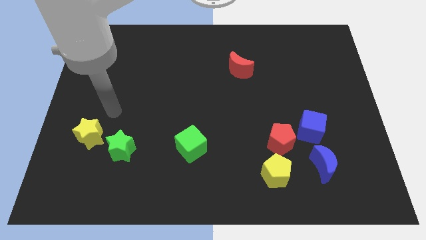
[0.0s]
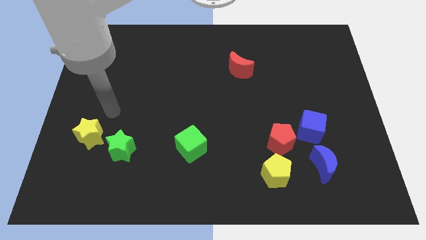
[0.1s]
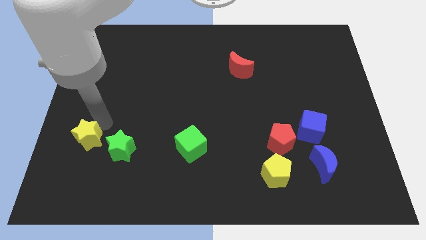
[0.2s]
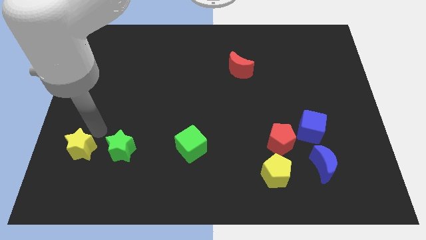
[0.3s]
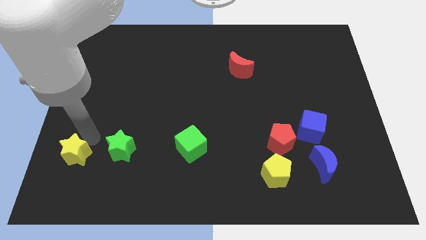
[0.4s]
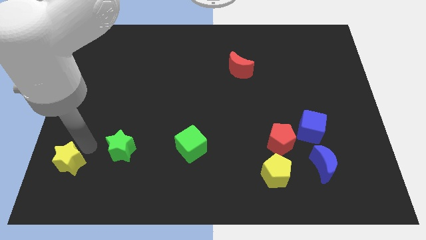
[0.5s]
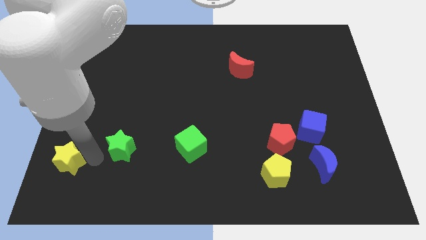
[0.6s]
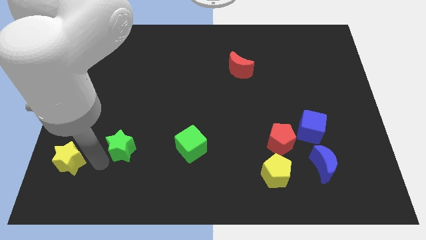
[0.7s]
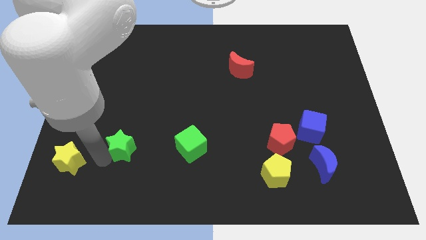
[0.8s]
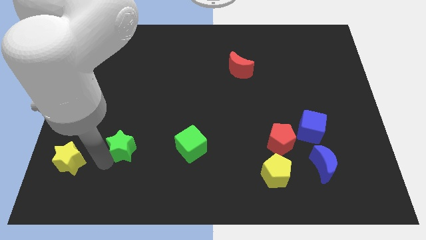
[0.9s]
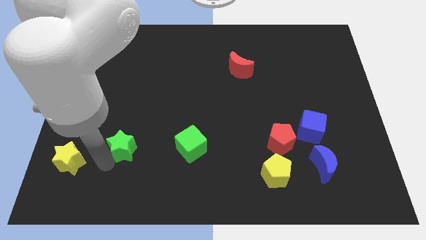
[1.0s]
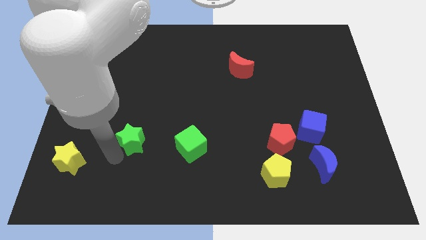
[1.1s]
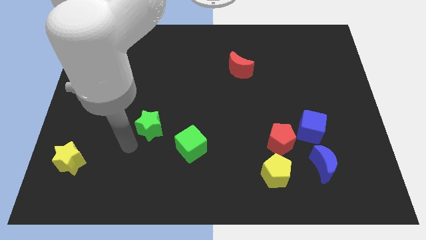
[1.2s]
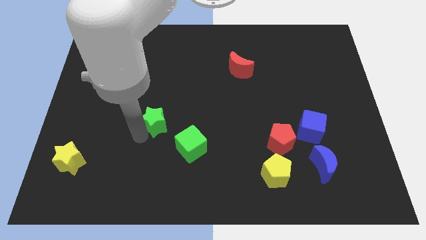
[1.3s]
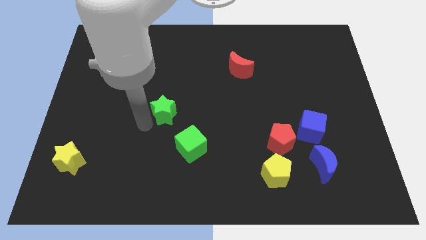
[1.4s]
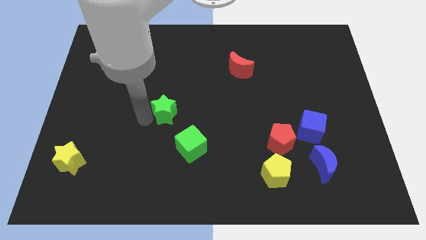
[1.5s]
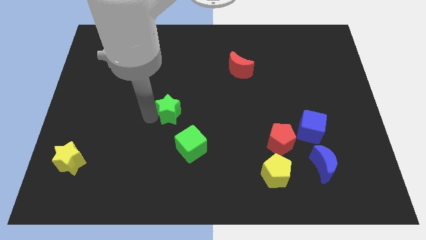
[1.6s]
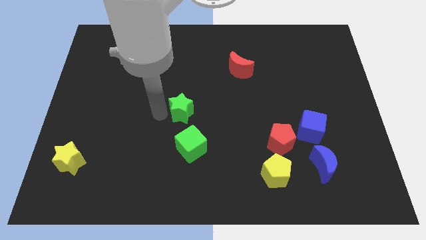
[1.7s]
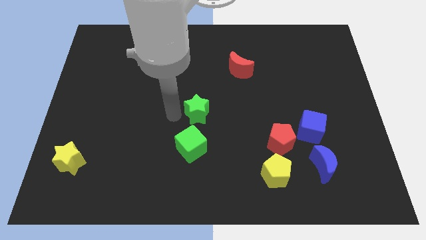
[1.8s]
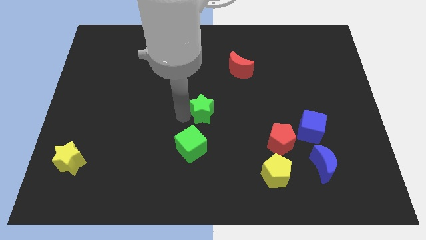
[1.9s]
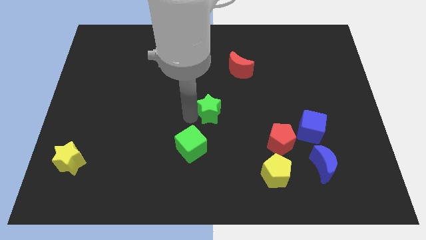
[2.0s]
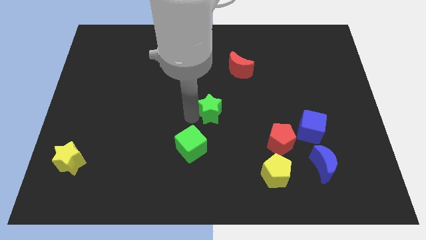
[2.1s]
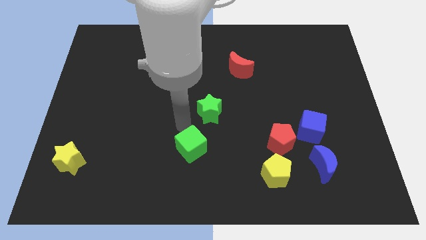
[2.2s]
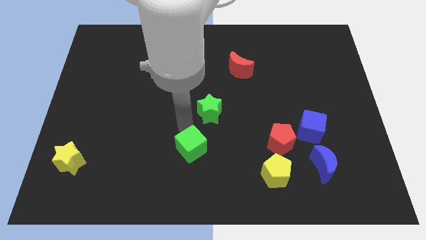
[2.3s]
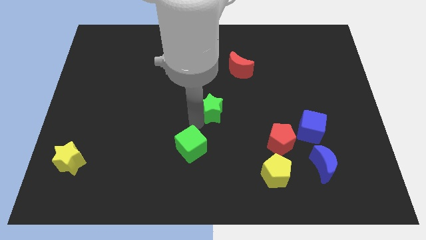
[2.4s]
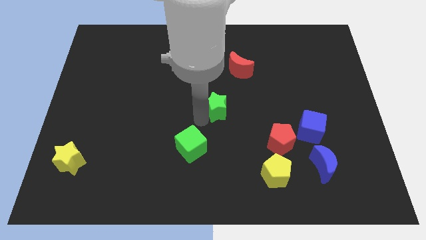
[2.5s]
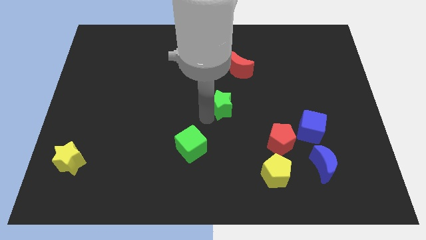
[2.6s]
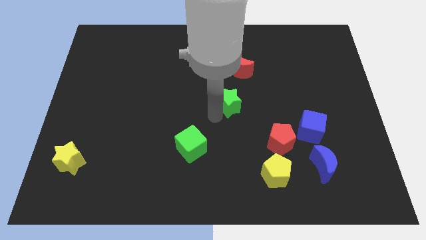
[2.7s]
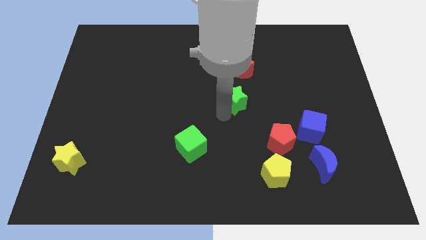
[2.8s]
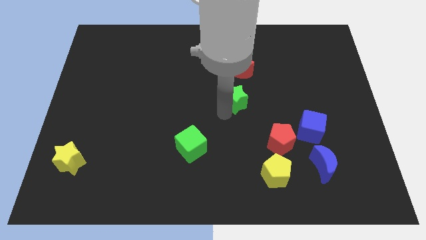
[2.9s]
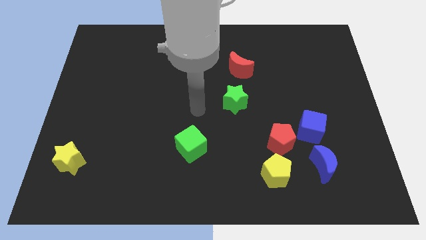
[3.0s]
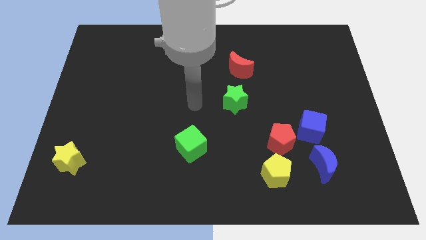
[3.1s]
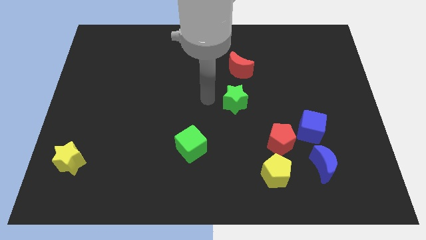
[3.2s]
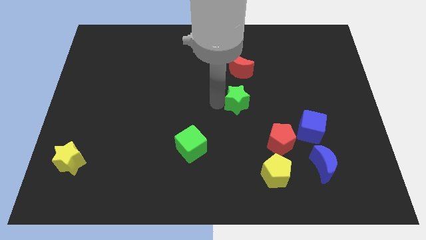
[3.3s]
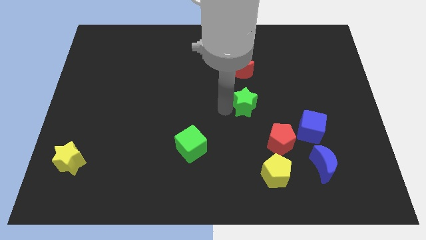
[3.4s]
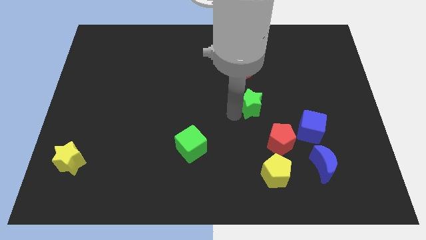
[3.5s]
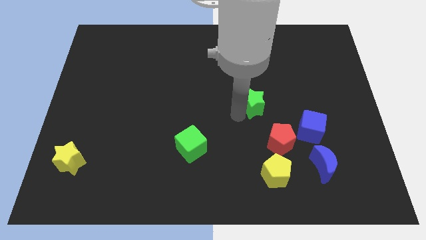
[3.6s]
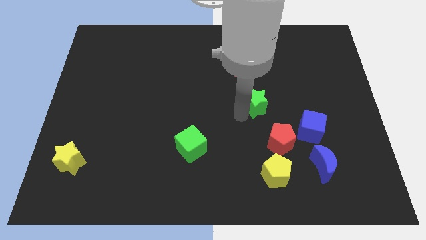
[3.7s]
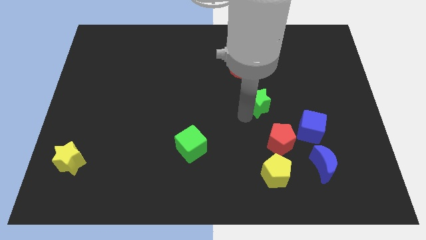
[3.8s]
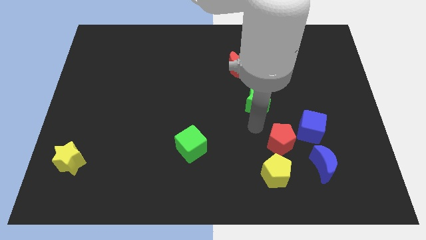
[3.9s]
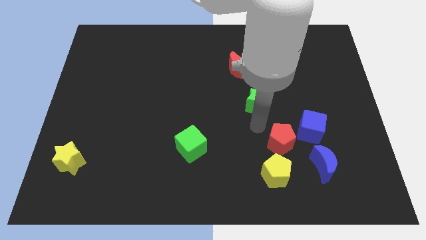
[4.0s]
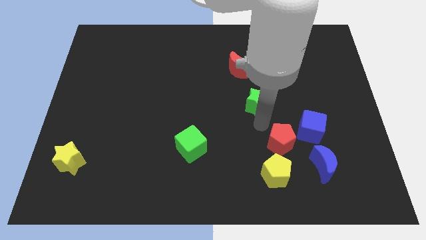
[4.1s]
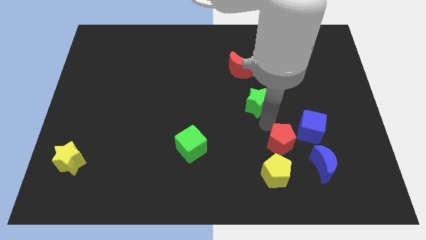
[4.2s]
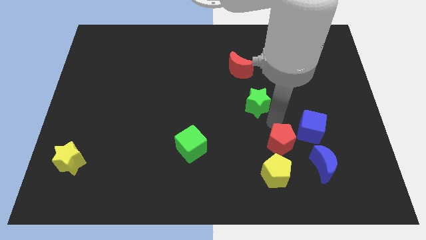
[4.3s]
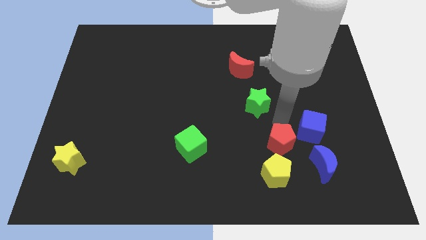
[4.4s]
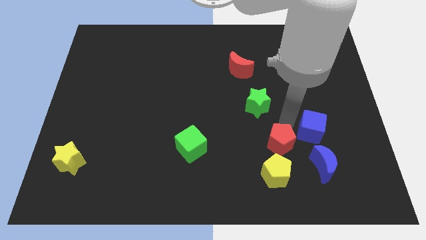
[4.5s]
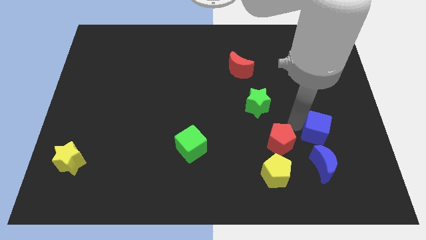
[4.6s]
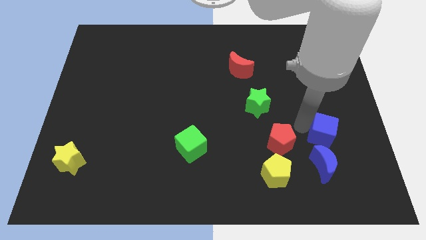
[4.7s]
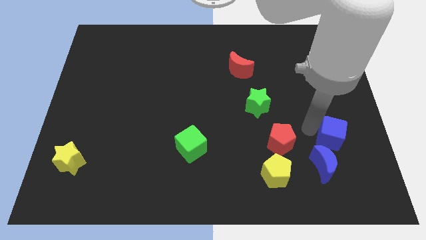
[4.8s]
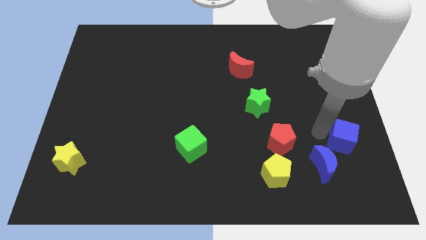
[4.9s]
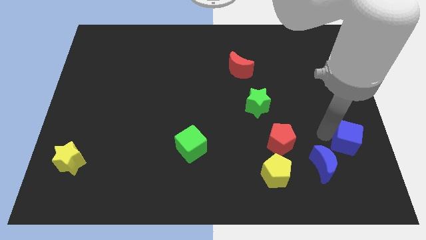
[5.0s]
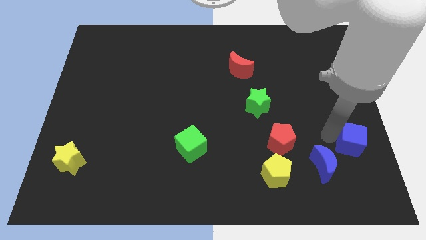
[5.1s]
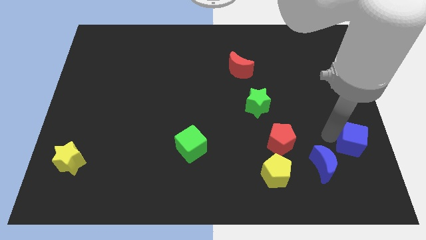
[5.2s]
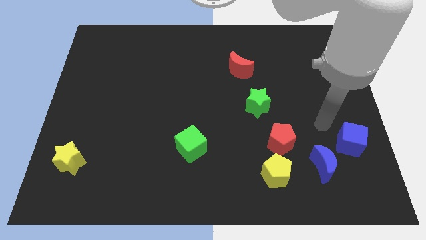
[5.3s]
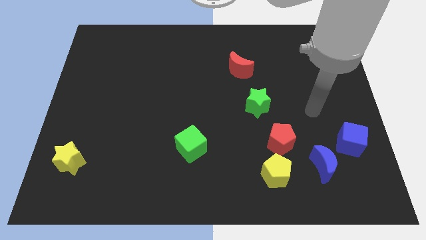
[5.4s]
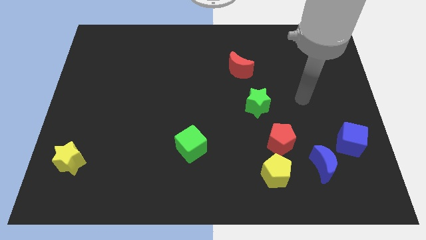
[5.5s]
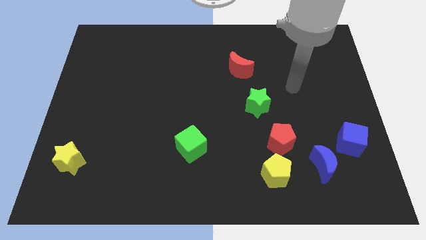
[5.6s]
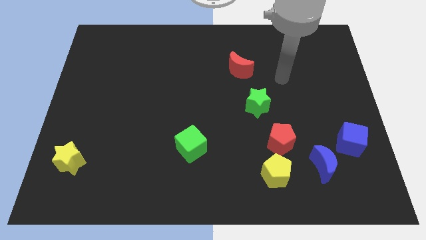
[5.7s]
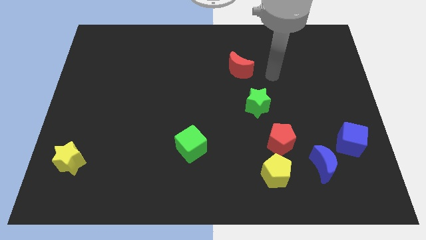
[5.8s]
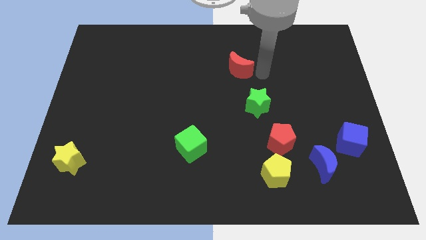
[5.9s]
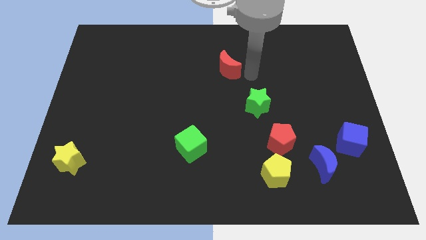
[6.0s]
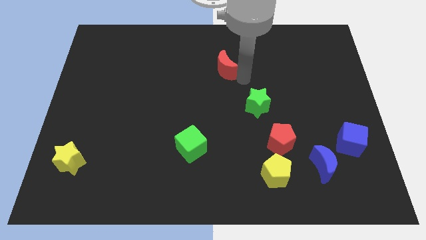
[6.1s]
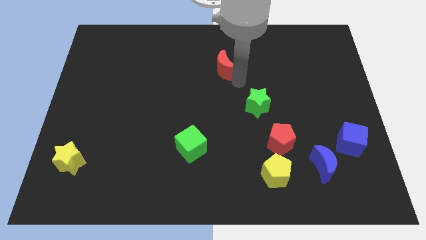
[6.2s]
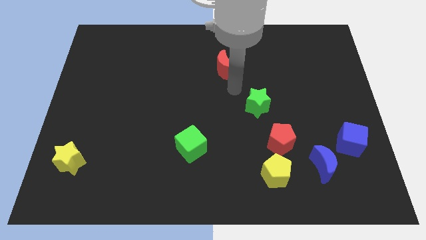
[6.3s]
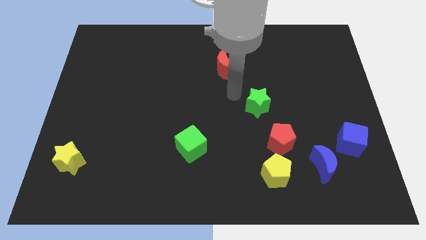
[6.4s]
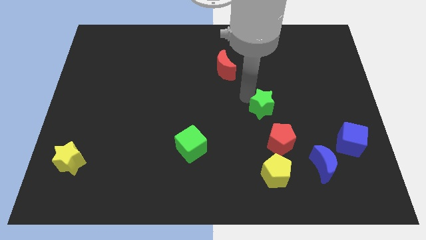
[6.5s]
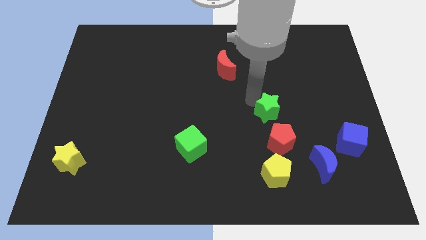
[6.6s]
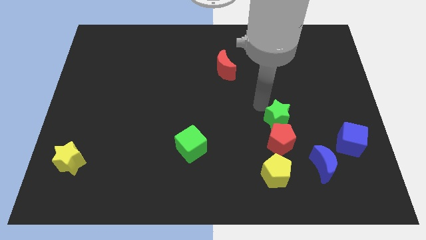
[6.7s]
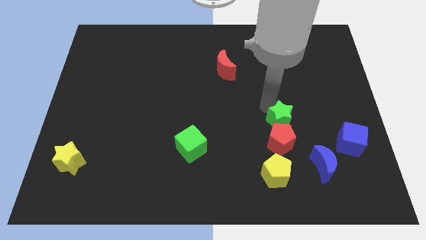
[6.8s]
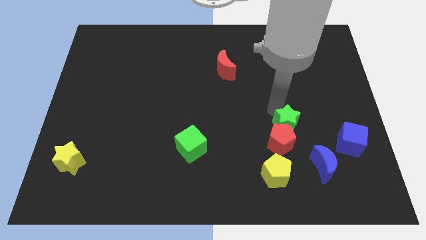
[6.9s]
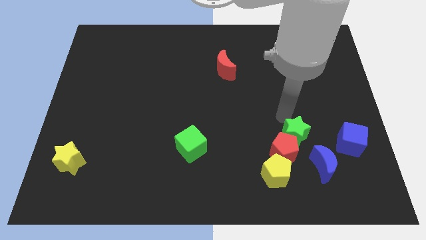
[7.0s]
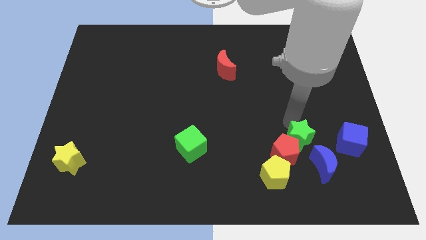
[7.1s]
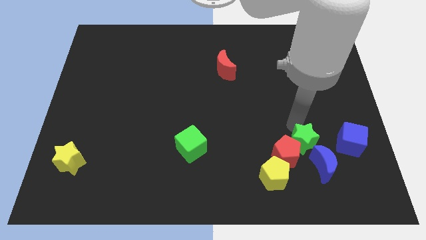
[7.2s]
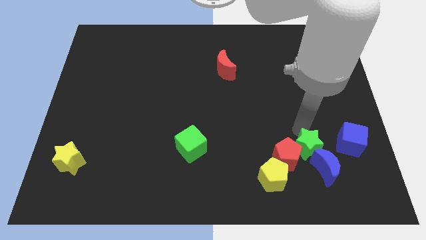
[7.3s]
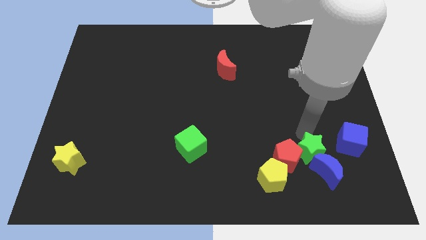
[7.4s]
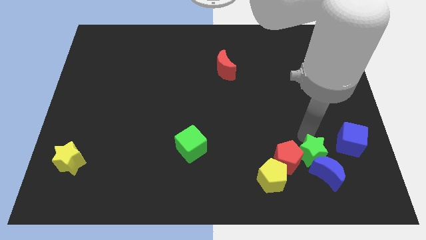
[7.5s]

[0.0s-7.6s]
put the green star close to the blue moon

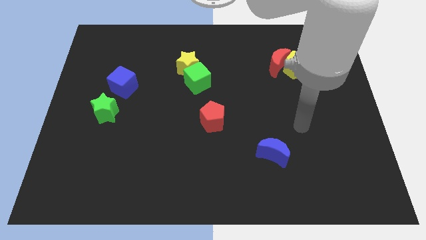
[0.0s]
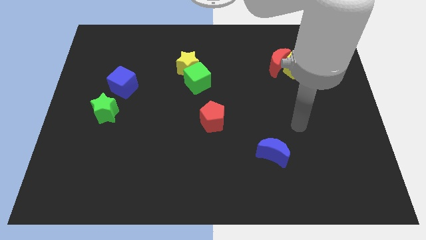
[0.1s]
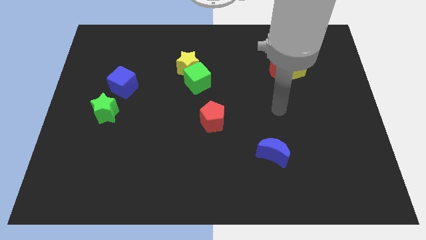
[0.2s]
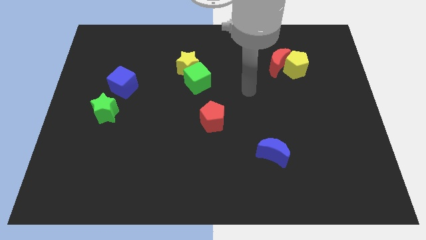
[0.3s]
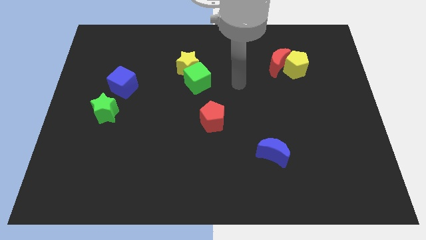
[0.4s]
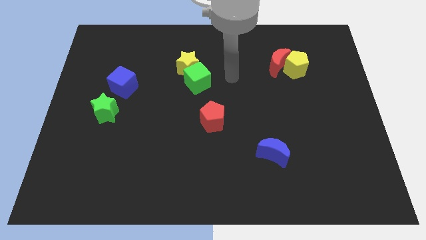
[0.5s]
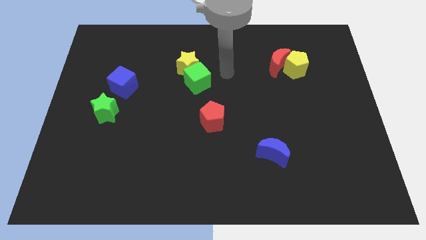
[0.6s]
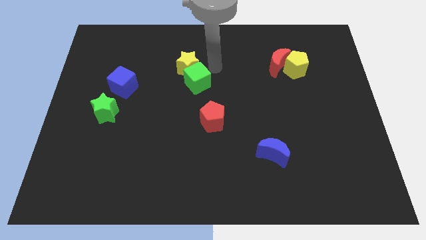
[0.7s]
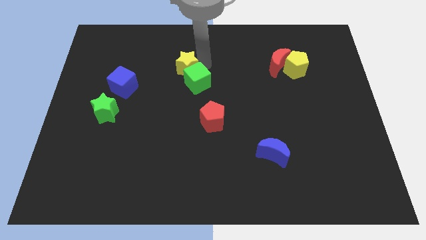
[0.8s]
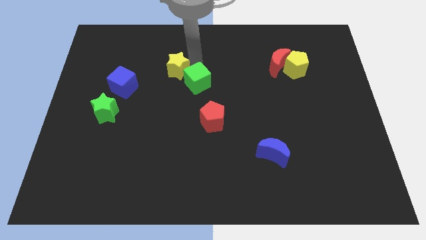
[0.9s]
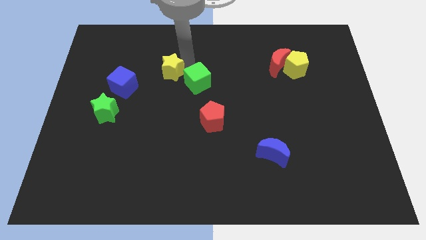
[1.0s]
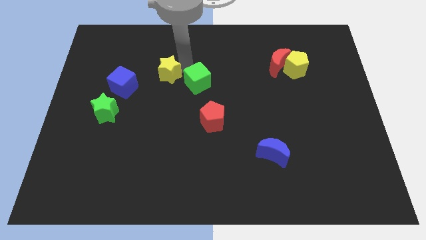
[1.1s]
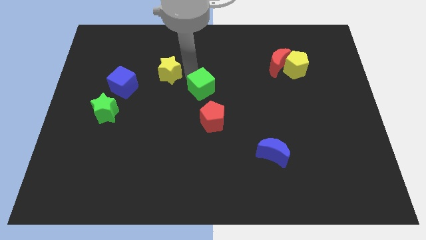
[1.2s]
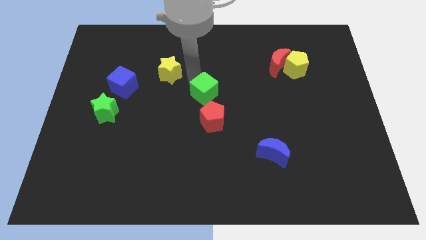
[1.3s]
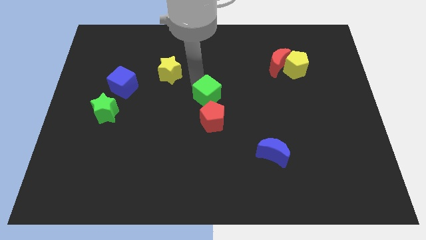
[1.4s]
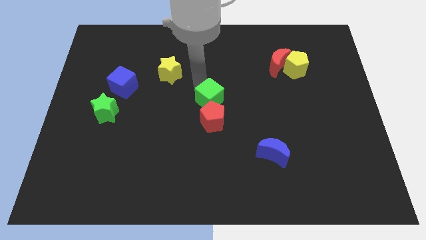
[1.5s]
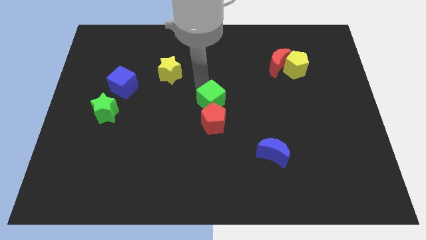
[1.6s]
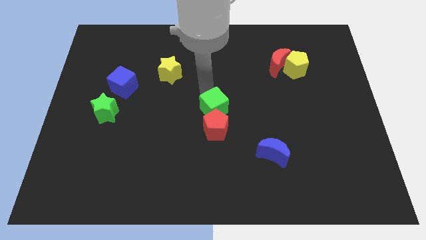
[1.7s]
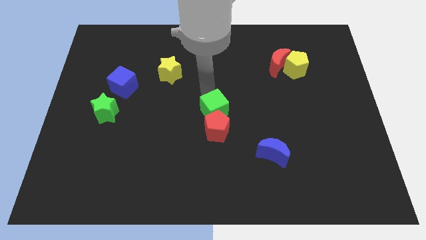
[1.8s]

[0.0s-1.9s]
slide the green cube towards the red pentagon
